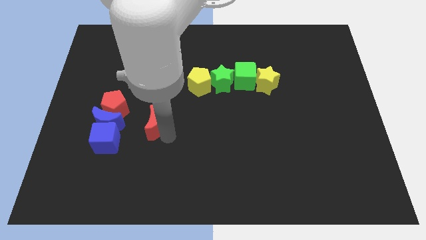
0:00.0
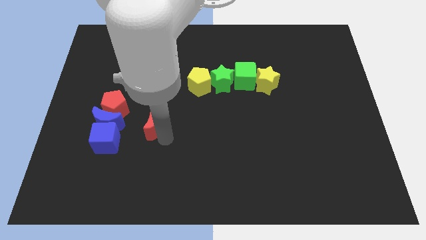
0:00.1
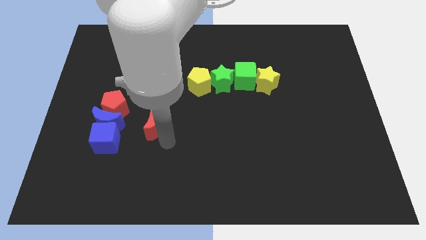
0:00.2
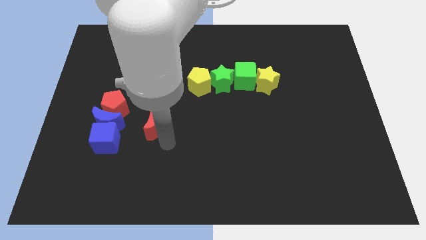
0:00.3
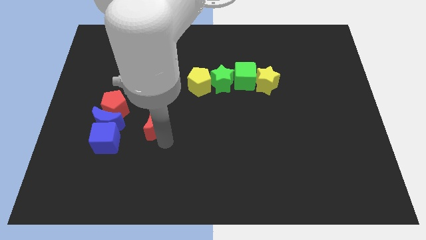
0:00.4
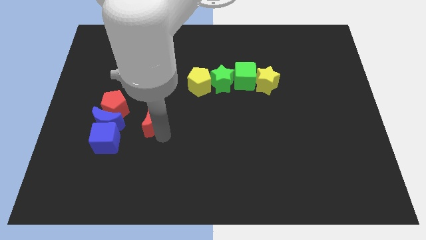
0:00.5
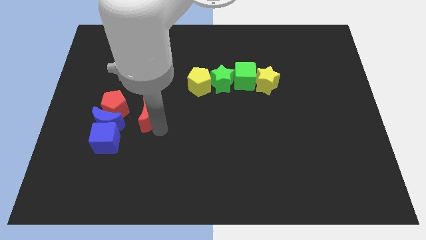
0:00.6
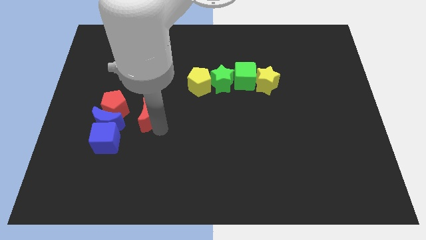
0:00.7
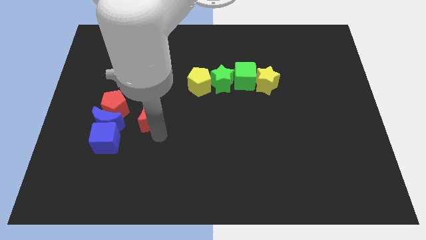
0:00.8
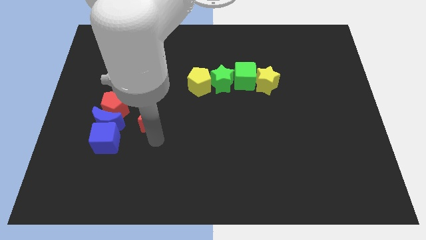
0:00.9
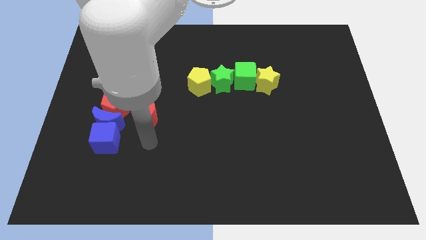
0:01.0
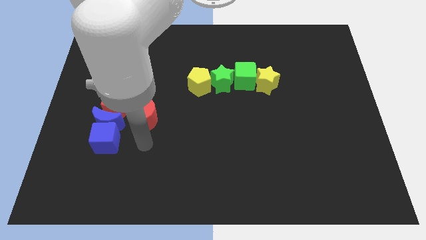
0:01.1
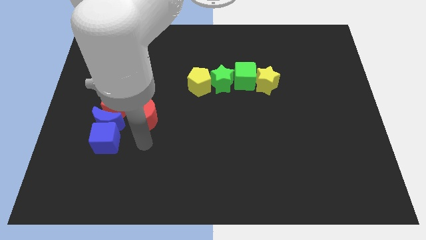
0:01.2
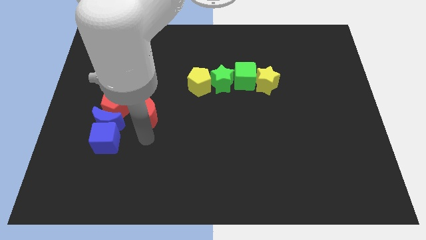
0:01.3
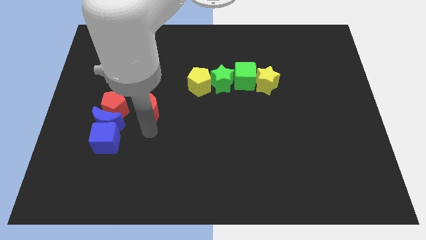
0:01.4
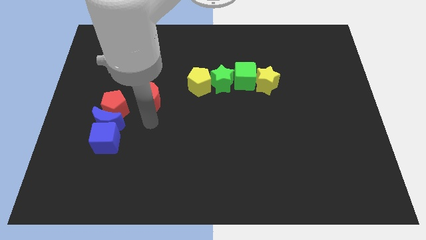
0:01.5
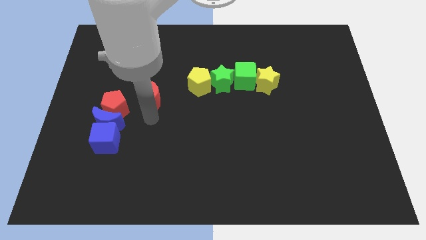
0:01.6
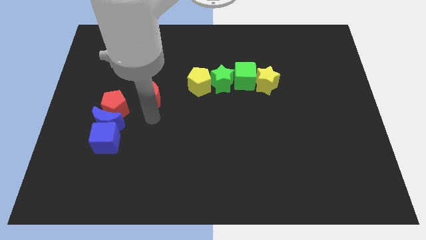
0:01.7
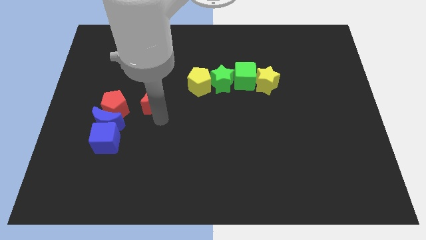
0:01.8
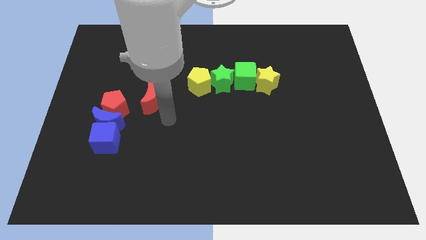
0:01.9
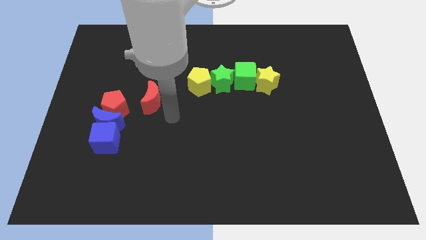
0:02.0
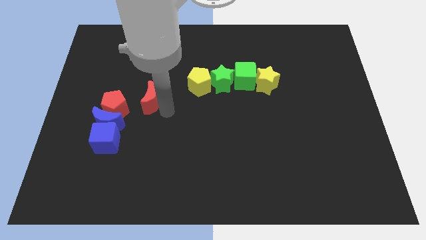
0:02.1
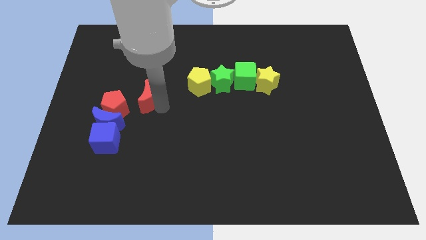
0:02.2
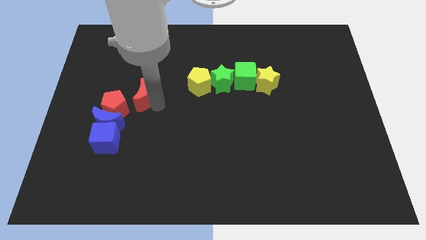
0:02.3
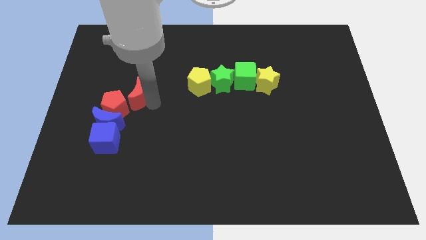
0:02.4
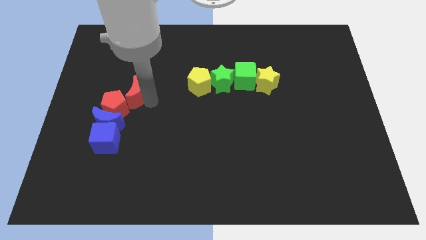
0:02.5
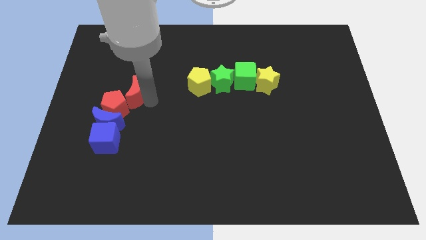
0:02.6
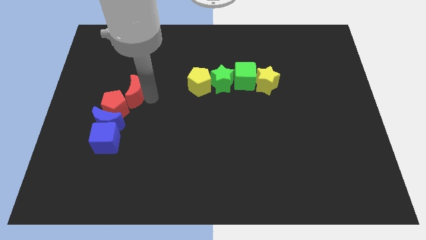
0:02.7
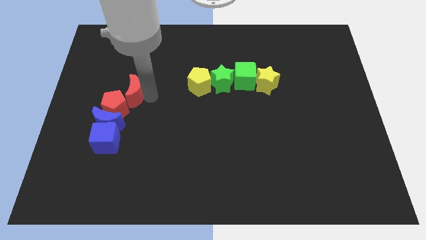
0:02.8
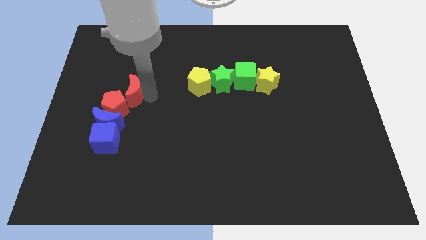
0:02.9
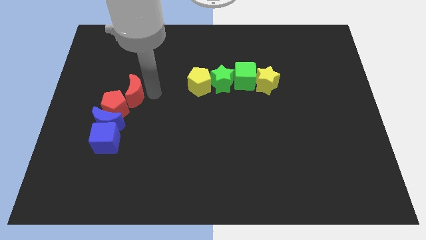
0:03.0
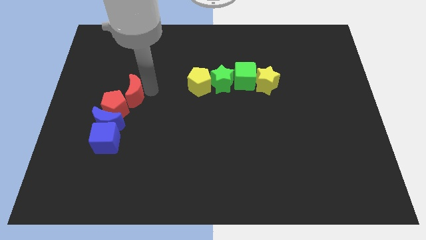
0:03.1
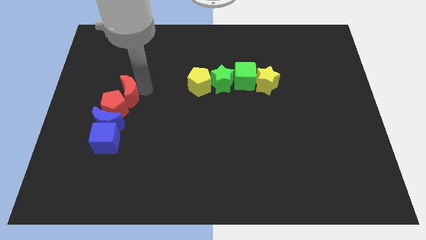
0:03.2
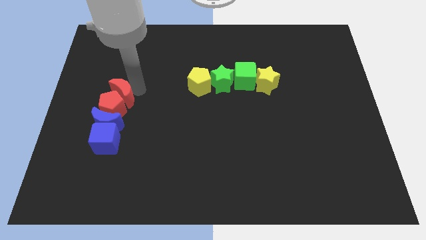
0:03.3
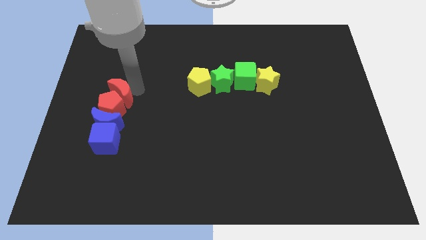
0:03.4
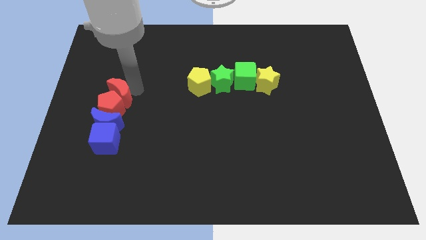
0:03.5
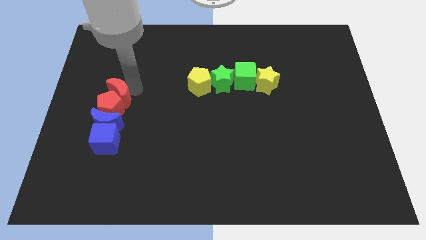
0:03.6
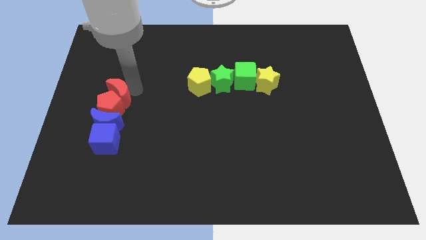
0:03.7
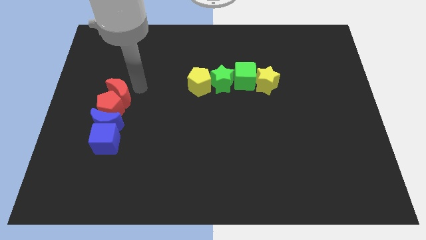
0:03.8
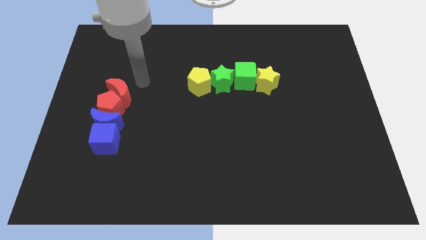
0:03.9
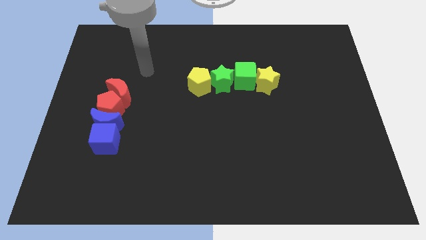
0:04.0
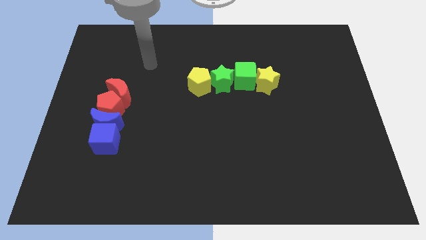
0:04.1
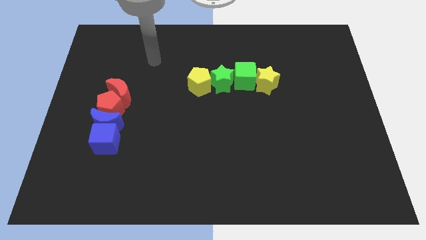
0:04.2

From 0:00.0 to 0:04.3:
push the red moon into the red pentagon

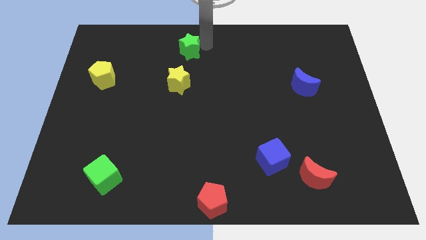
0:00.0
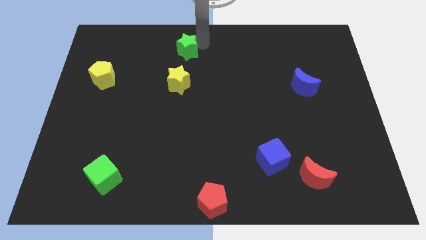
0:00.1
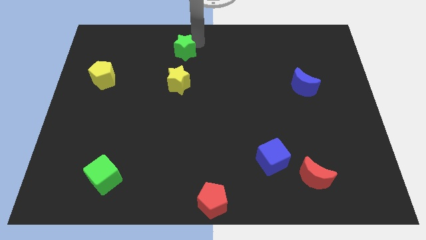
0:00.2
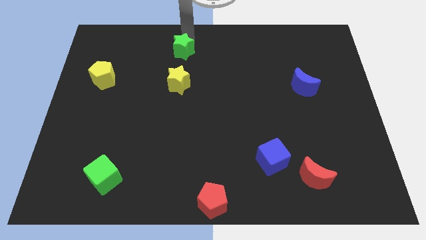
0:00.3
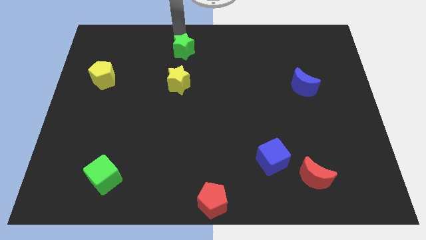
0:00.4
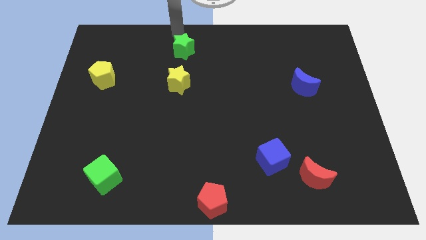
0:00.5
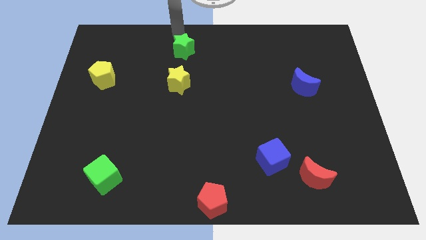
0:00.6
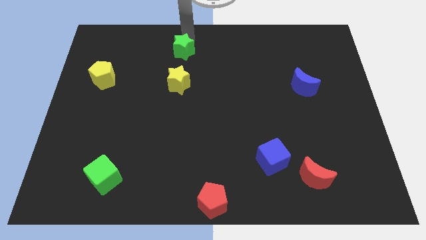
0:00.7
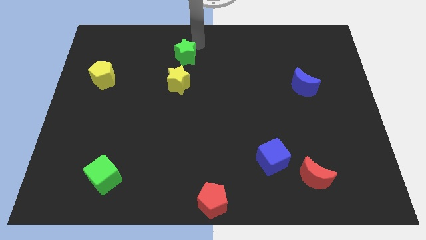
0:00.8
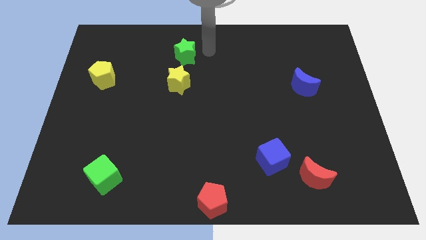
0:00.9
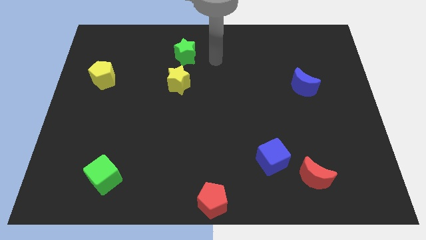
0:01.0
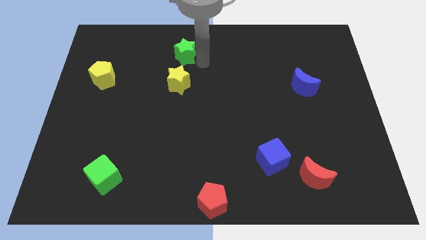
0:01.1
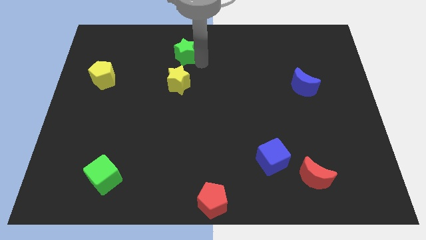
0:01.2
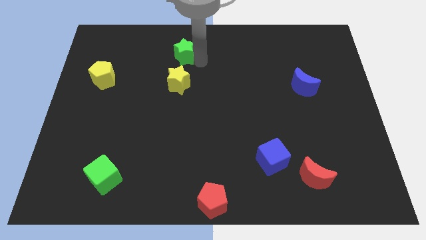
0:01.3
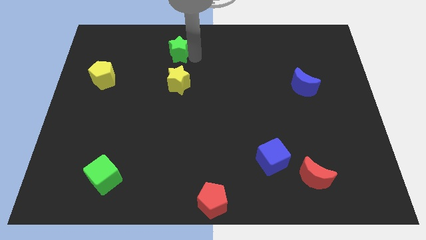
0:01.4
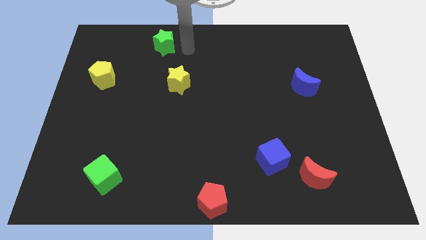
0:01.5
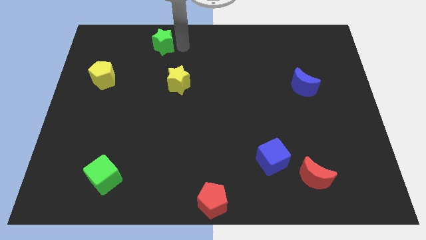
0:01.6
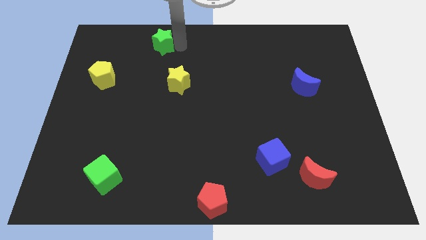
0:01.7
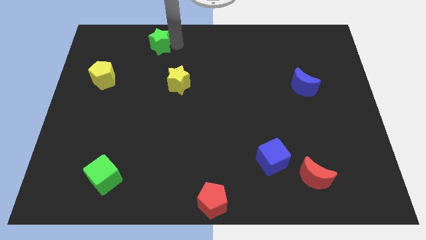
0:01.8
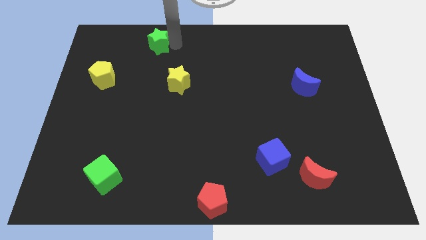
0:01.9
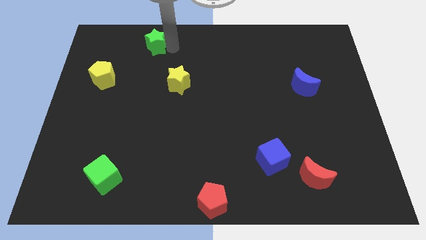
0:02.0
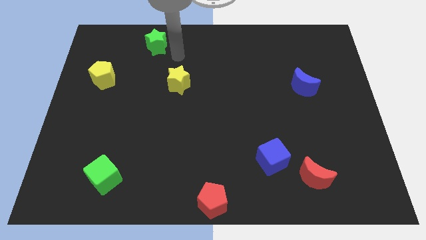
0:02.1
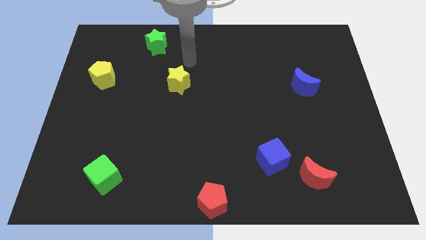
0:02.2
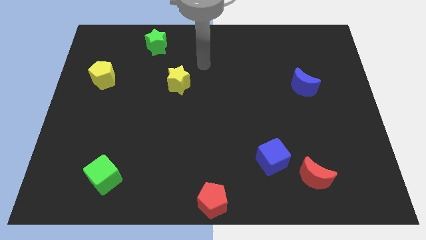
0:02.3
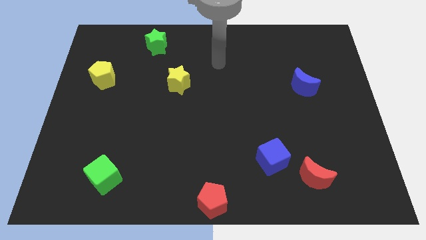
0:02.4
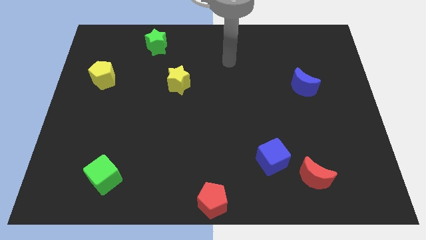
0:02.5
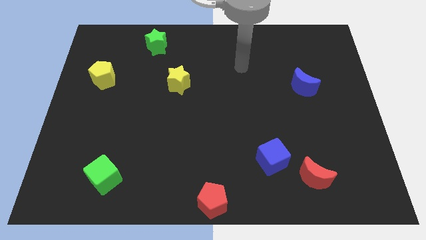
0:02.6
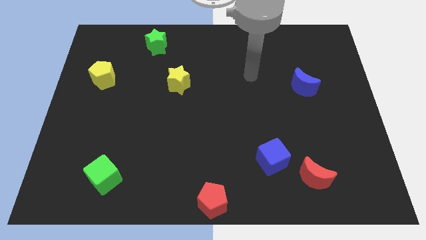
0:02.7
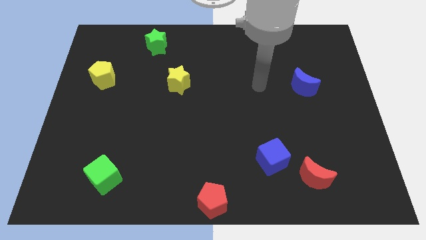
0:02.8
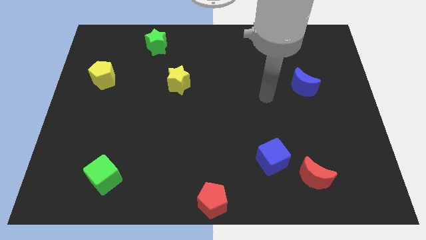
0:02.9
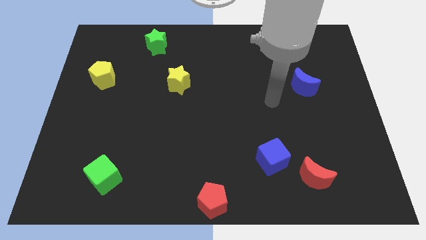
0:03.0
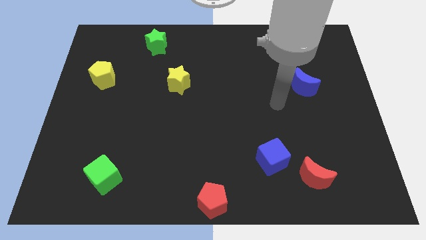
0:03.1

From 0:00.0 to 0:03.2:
put the green star diagonally to yellow star

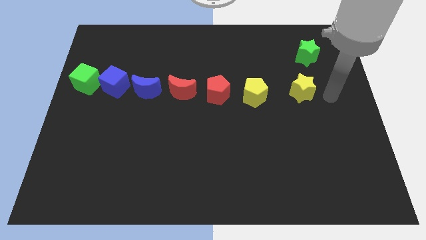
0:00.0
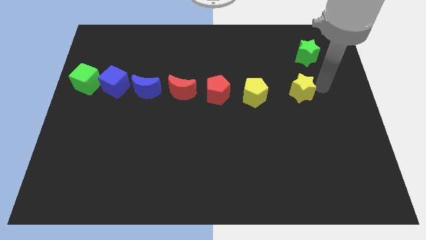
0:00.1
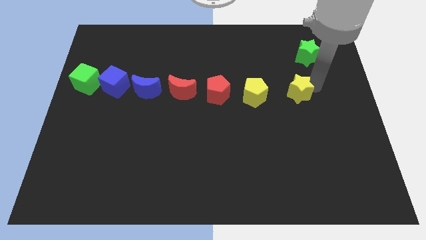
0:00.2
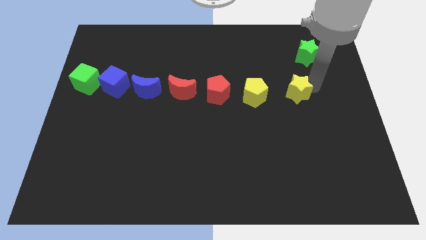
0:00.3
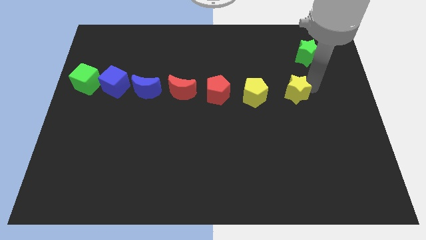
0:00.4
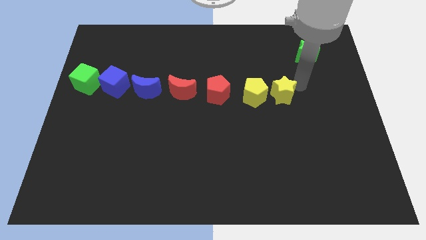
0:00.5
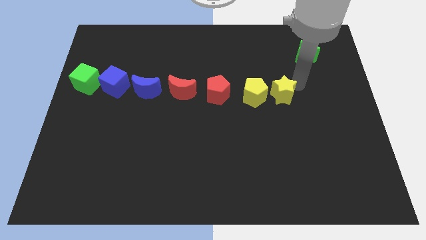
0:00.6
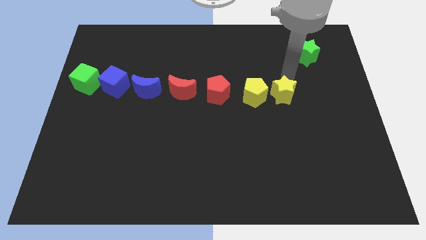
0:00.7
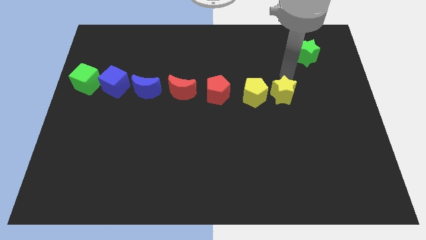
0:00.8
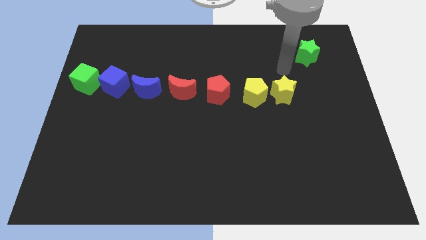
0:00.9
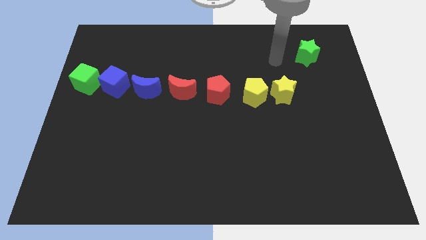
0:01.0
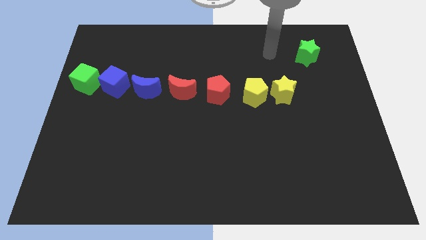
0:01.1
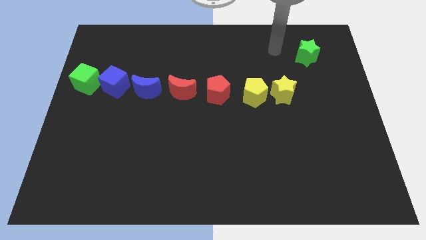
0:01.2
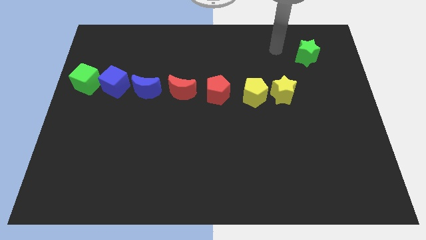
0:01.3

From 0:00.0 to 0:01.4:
push the yellow star to the right of the yellow pentagon
